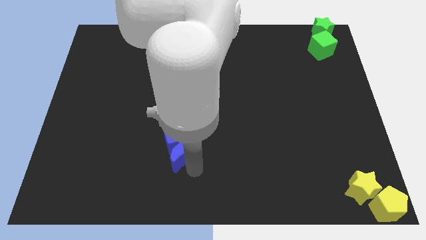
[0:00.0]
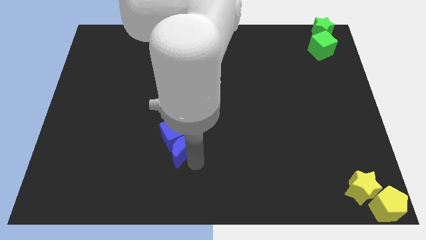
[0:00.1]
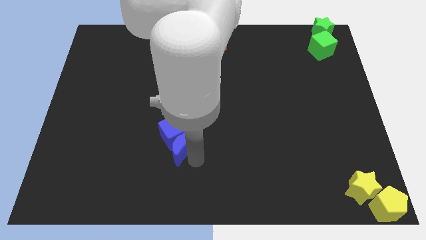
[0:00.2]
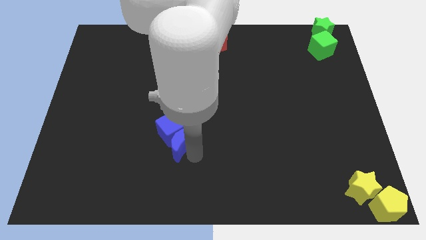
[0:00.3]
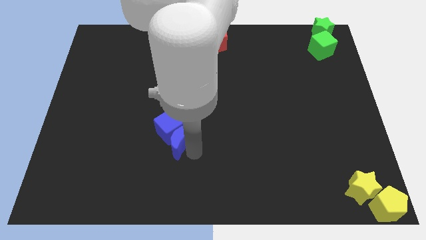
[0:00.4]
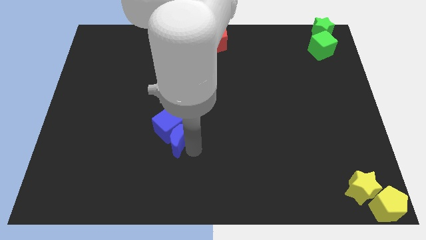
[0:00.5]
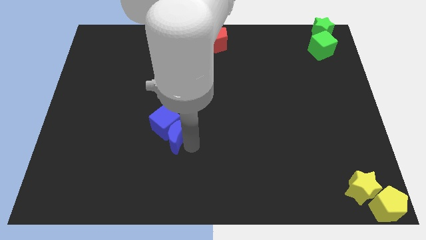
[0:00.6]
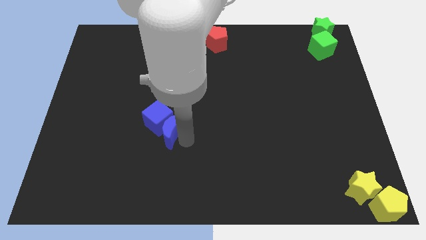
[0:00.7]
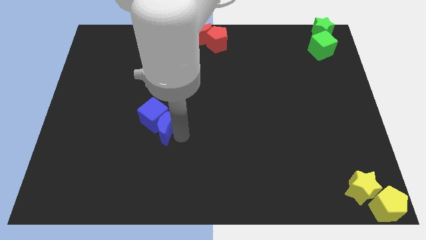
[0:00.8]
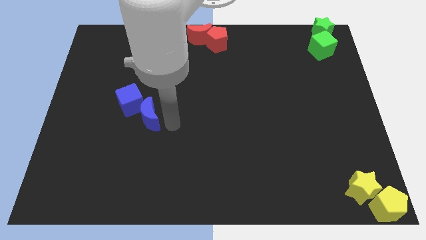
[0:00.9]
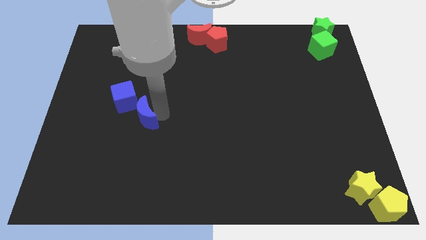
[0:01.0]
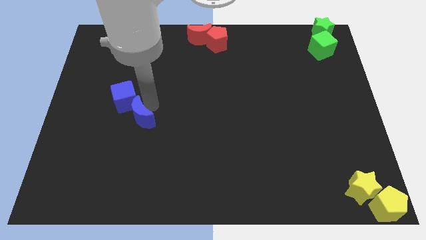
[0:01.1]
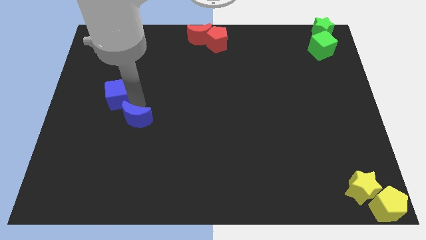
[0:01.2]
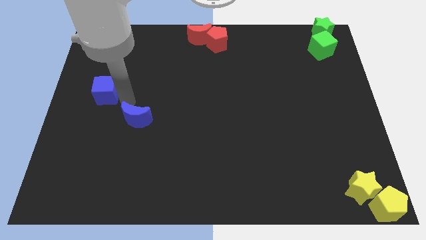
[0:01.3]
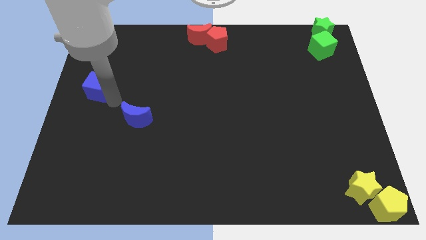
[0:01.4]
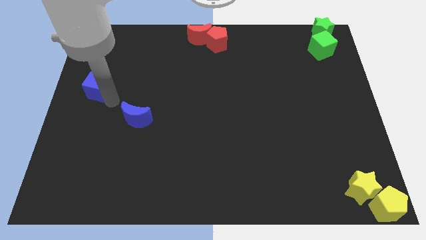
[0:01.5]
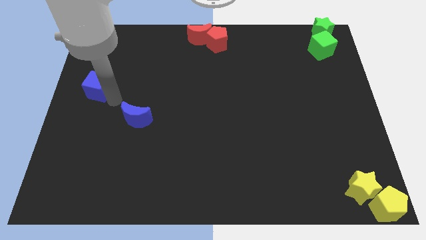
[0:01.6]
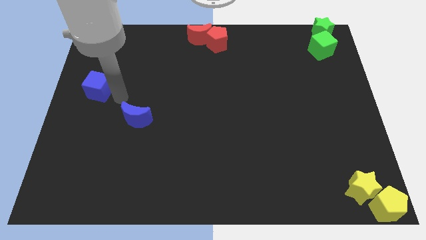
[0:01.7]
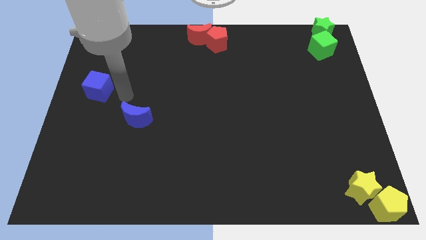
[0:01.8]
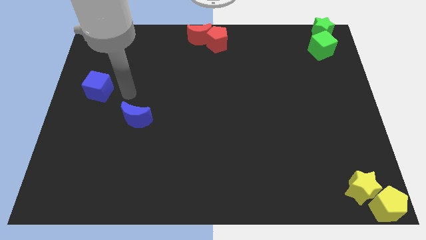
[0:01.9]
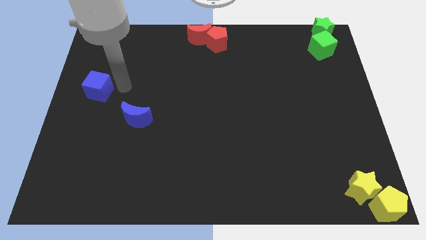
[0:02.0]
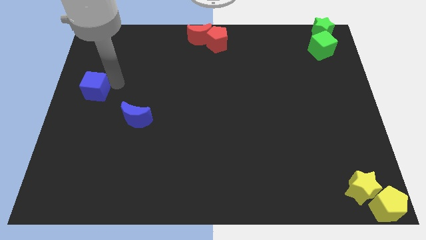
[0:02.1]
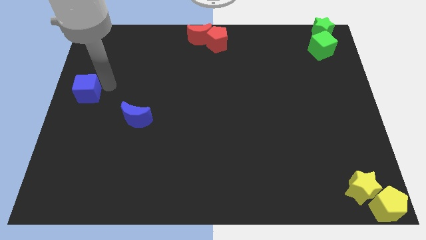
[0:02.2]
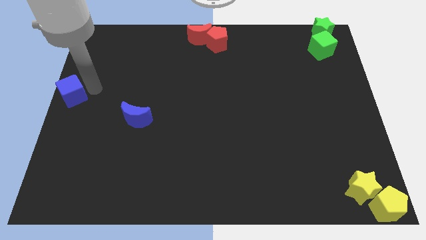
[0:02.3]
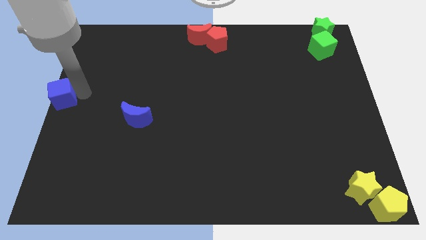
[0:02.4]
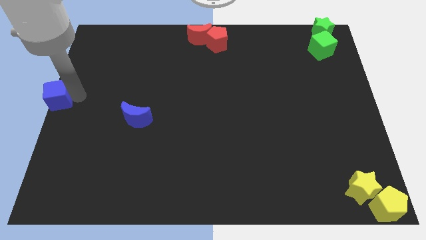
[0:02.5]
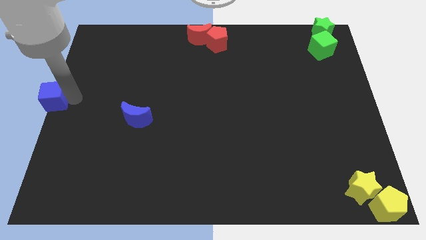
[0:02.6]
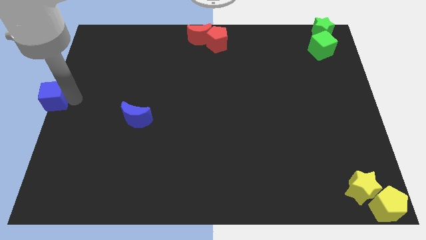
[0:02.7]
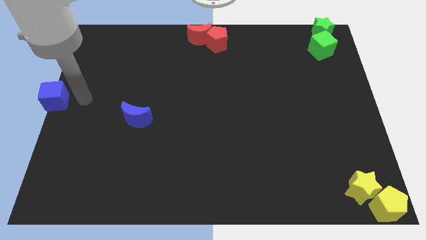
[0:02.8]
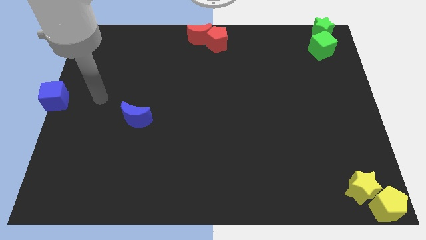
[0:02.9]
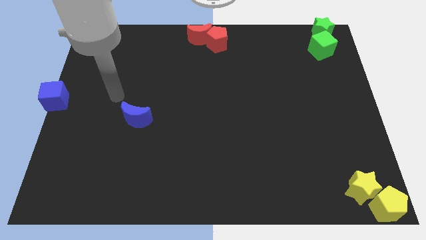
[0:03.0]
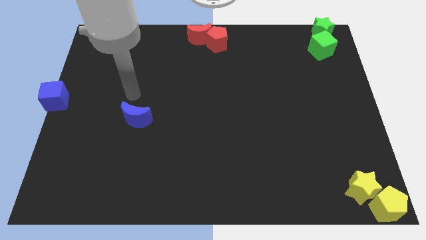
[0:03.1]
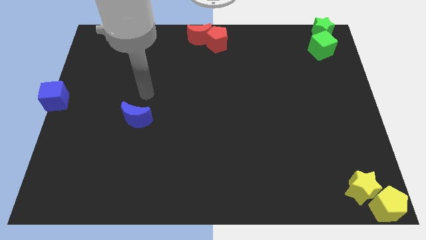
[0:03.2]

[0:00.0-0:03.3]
move the blue cube to the center left of the board

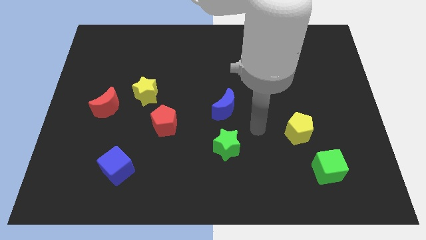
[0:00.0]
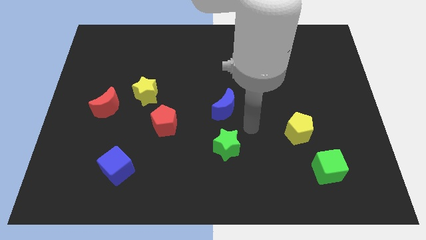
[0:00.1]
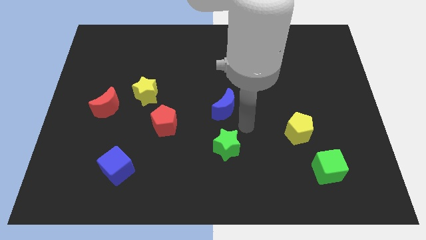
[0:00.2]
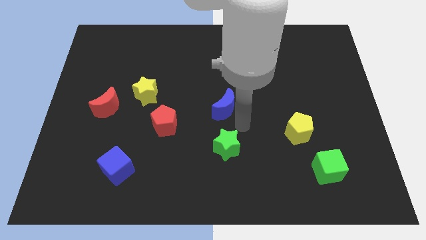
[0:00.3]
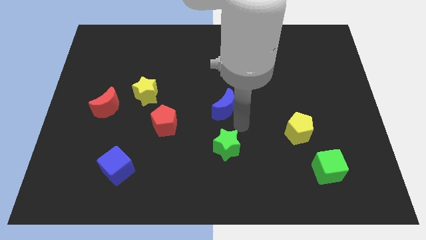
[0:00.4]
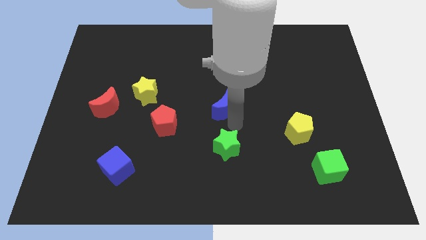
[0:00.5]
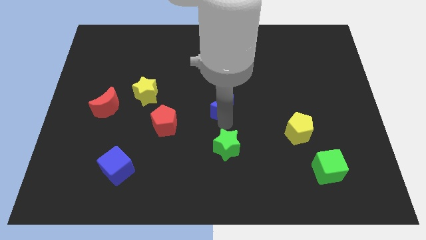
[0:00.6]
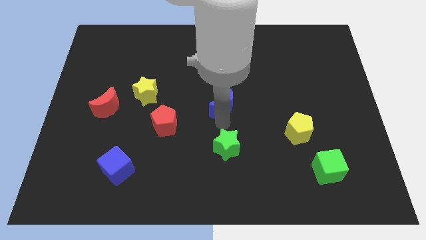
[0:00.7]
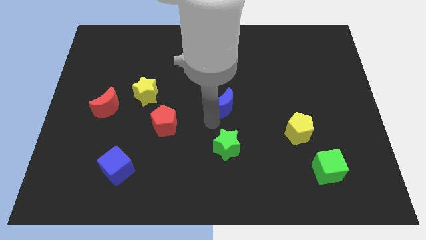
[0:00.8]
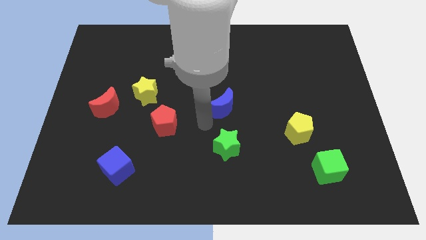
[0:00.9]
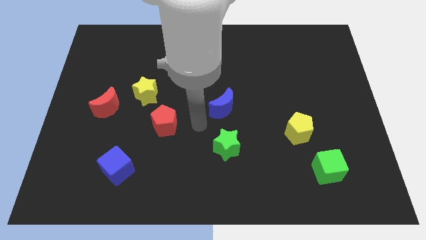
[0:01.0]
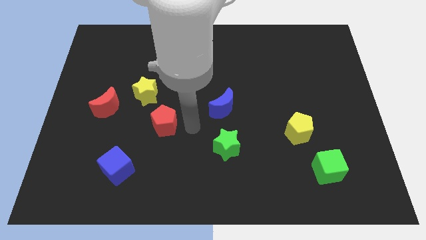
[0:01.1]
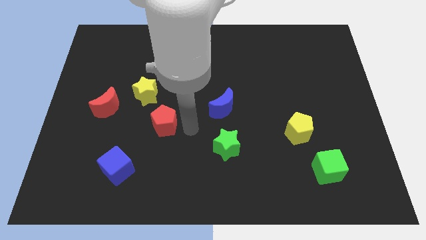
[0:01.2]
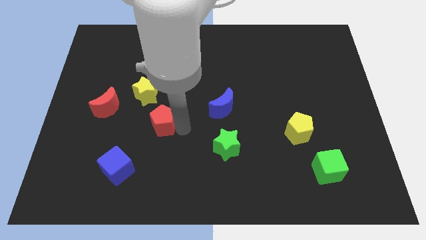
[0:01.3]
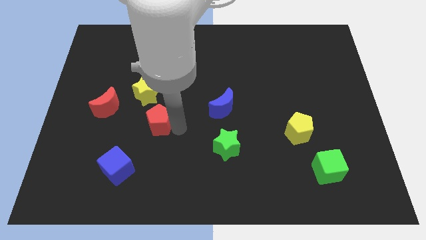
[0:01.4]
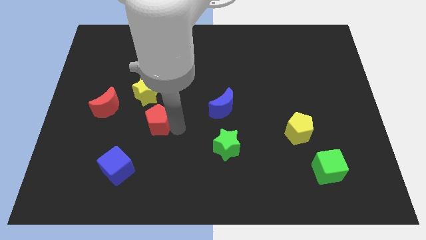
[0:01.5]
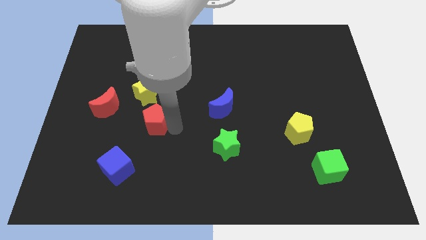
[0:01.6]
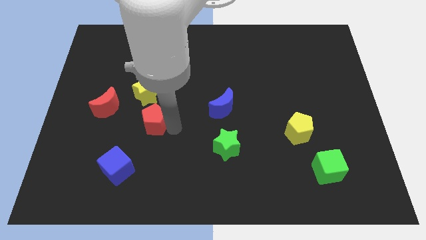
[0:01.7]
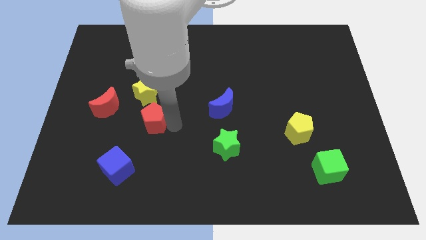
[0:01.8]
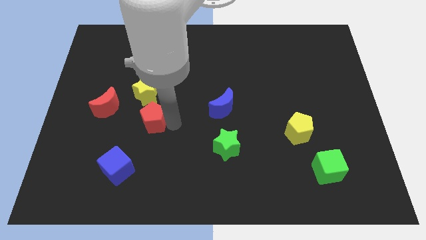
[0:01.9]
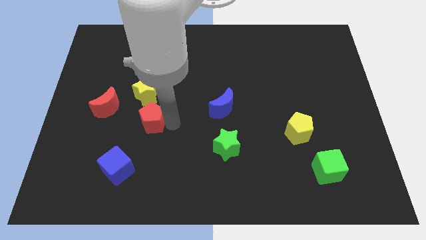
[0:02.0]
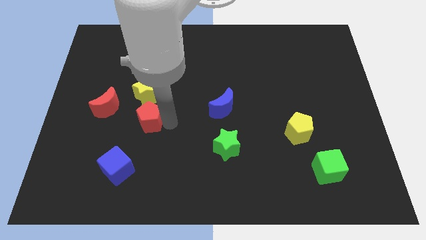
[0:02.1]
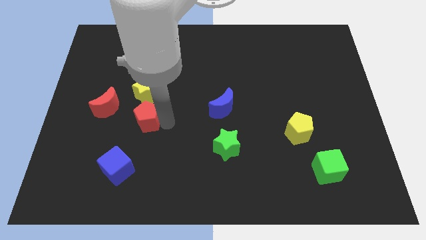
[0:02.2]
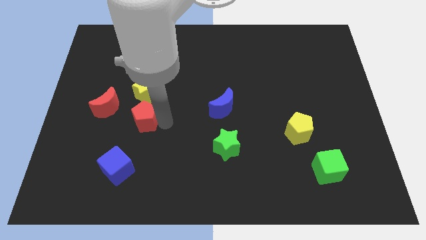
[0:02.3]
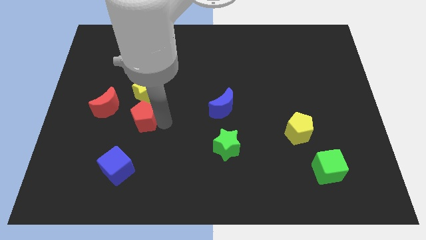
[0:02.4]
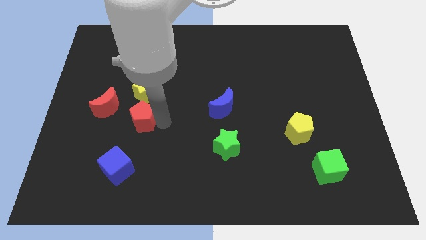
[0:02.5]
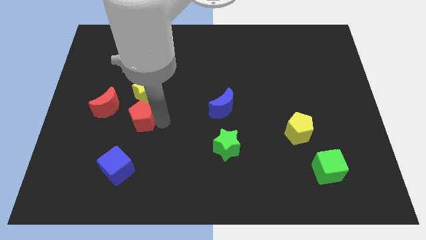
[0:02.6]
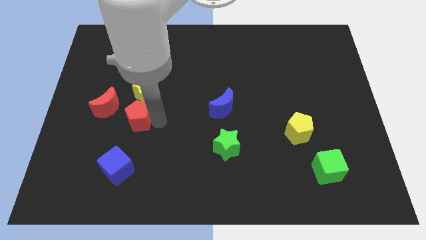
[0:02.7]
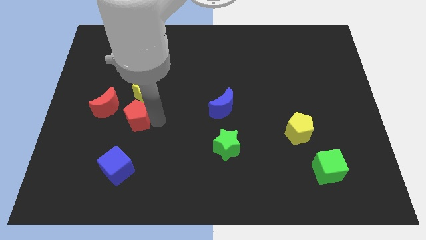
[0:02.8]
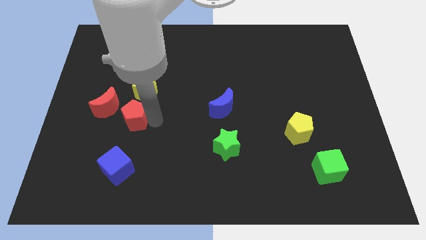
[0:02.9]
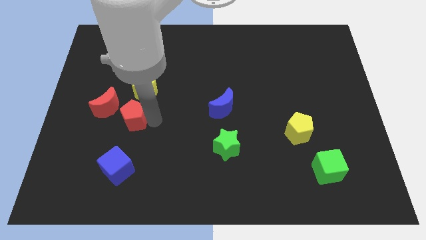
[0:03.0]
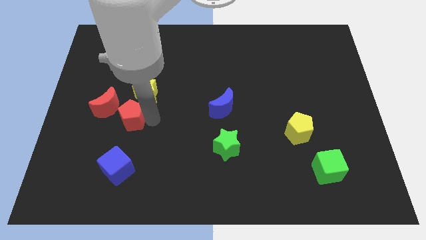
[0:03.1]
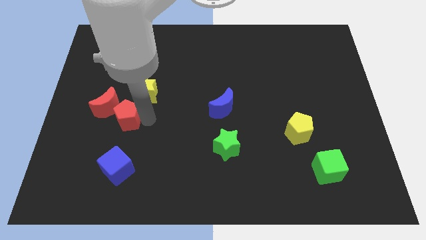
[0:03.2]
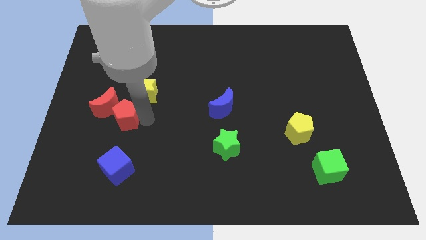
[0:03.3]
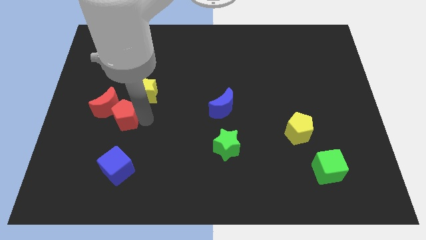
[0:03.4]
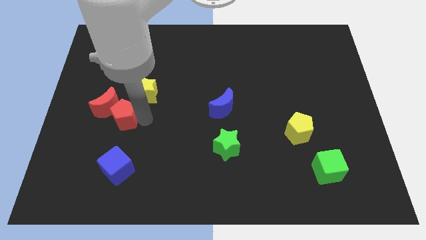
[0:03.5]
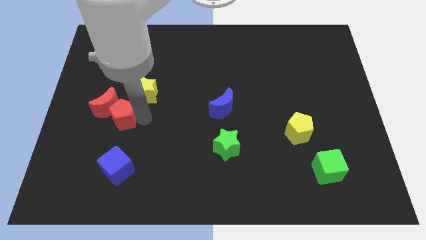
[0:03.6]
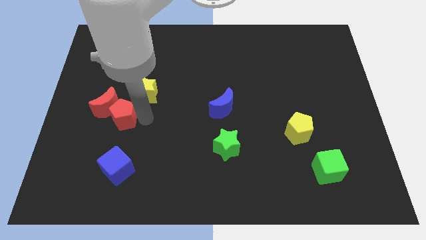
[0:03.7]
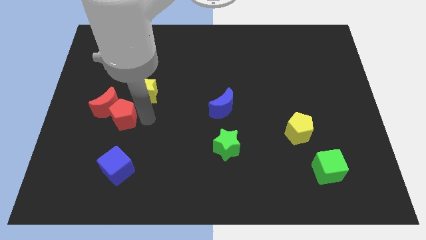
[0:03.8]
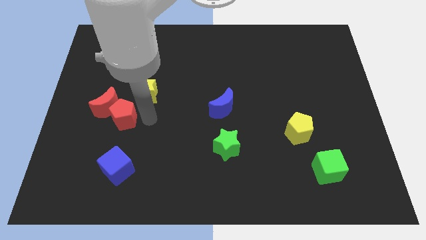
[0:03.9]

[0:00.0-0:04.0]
move the red pentagon to the right of the red crescent

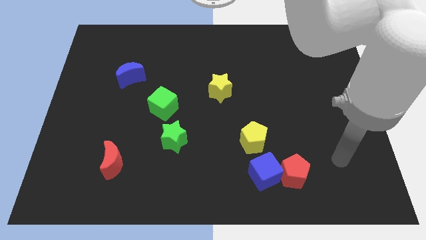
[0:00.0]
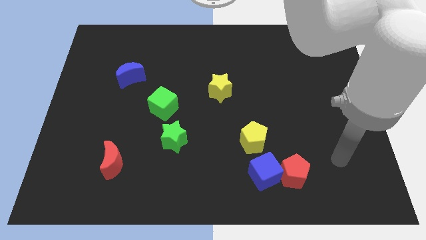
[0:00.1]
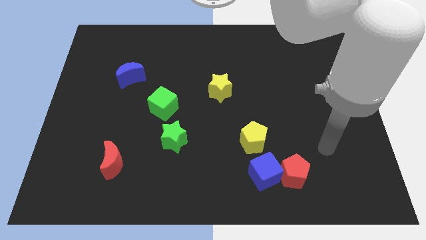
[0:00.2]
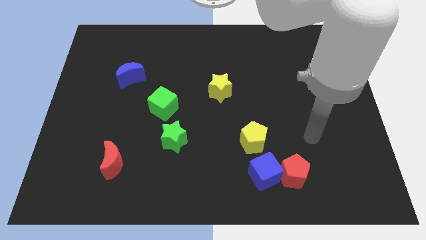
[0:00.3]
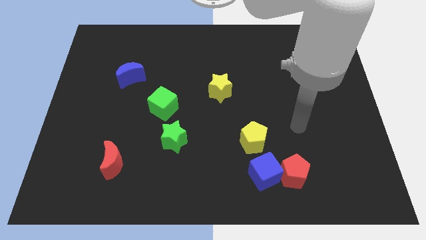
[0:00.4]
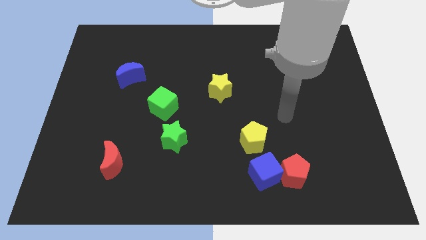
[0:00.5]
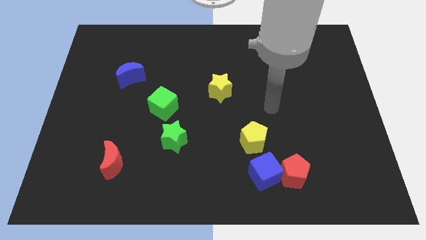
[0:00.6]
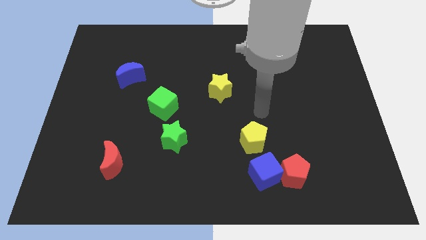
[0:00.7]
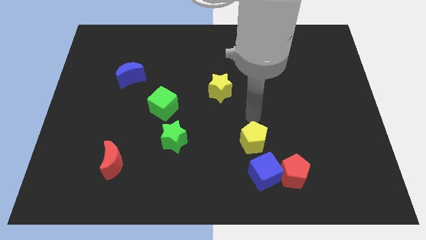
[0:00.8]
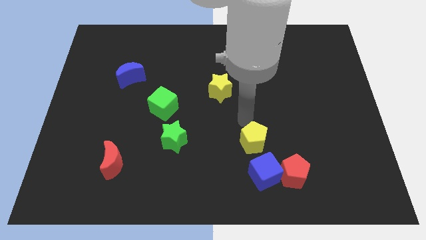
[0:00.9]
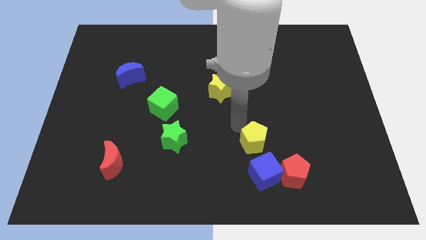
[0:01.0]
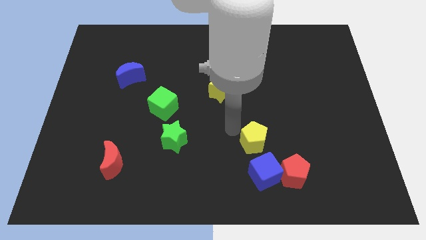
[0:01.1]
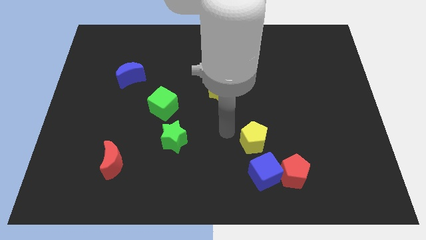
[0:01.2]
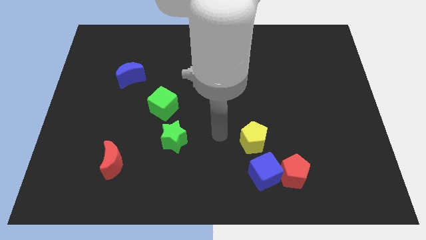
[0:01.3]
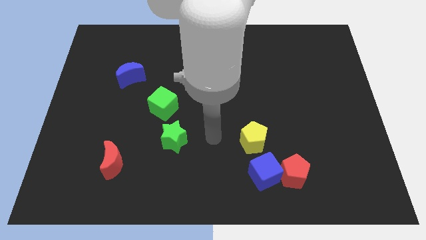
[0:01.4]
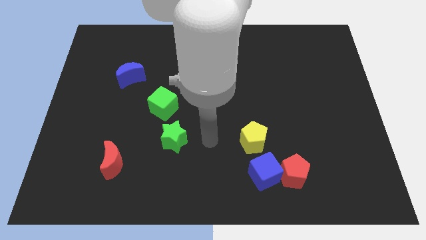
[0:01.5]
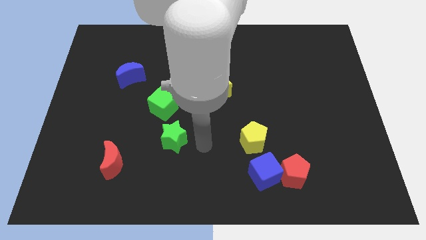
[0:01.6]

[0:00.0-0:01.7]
place the arm in between the green star and the yellow pentagon
